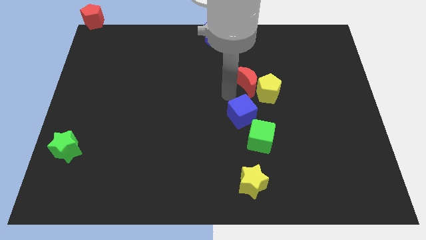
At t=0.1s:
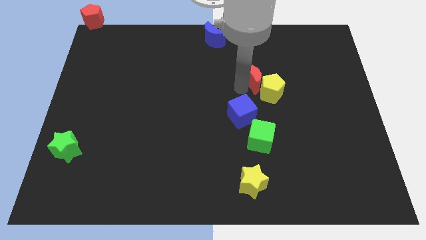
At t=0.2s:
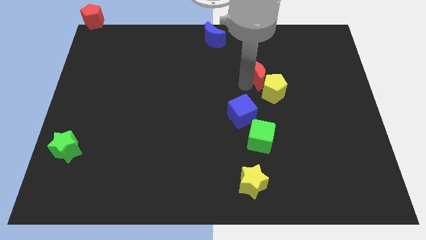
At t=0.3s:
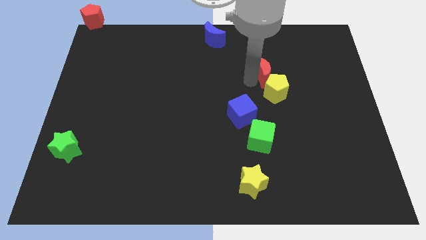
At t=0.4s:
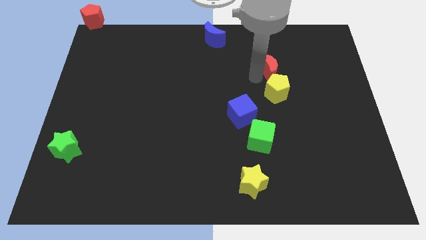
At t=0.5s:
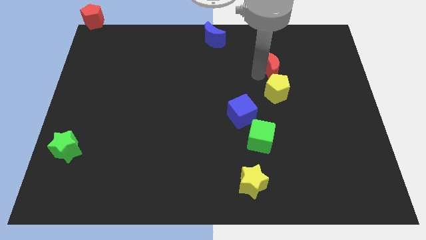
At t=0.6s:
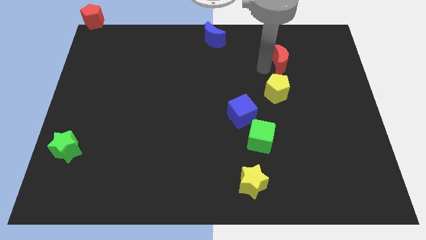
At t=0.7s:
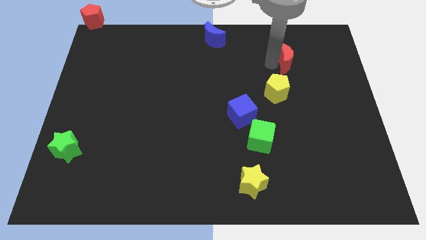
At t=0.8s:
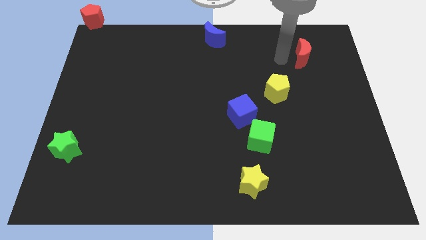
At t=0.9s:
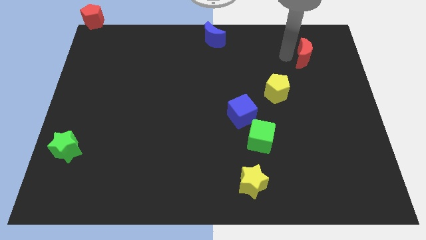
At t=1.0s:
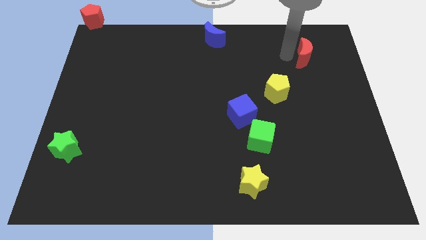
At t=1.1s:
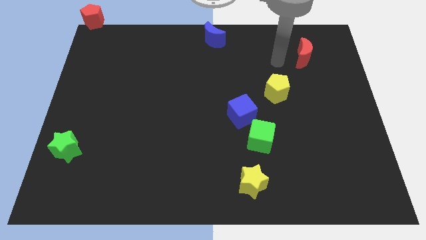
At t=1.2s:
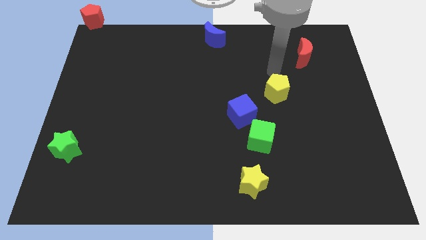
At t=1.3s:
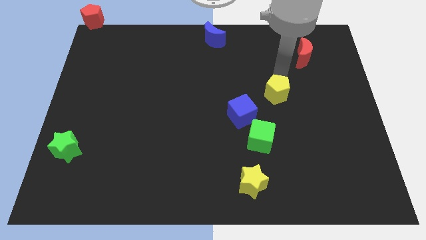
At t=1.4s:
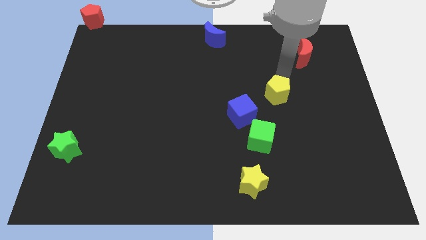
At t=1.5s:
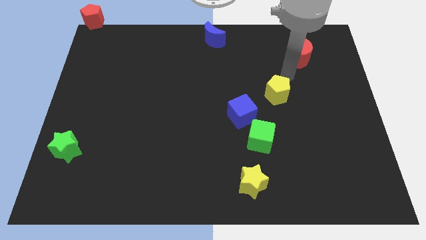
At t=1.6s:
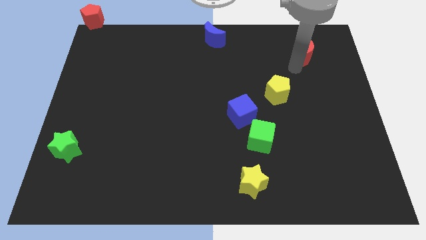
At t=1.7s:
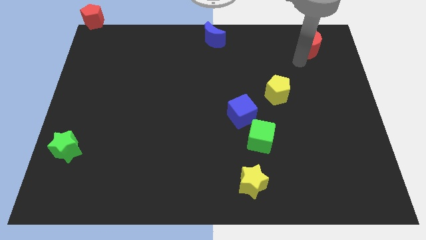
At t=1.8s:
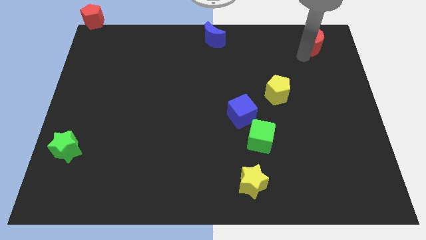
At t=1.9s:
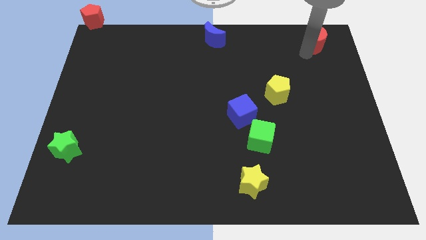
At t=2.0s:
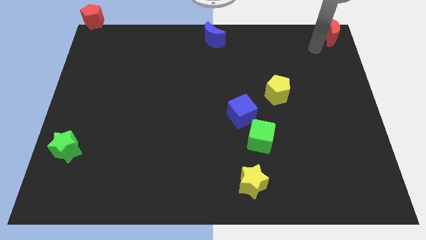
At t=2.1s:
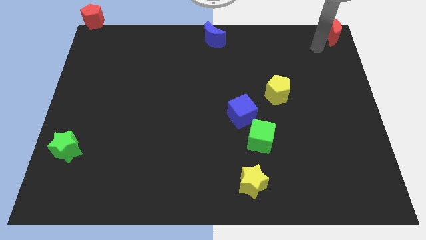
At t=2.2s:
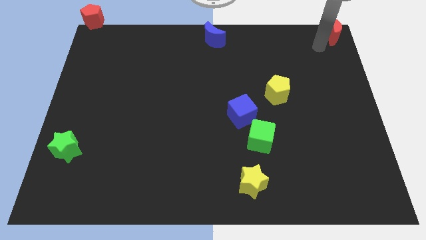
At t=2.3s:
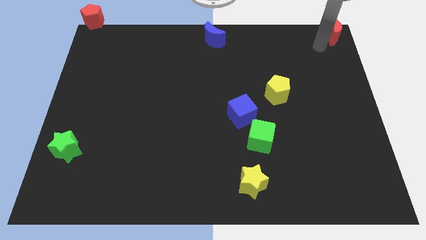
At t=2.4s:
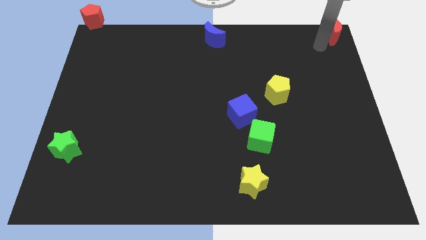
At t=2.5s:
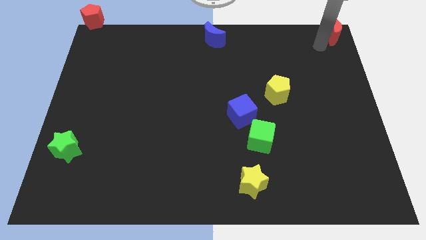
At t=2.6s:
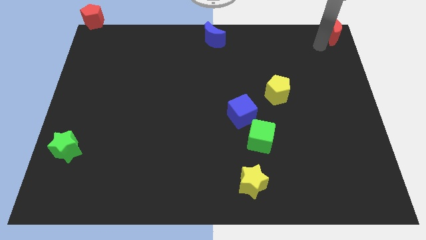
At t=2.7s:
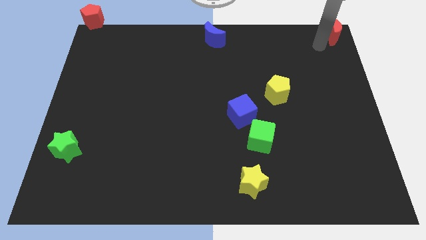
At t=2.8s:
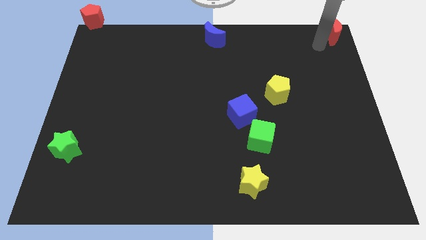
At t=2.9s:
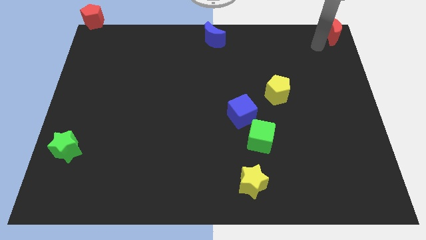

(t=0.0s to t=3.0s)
place red crescent towards top right corner

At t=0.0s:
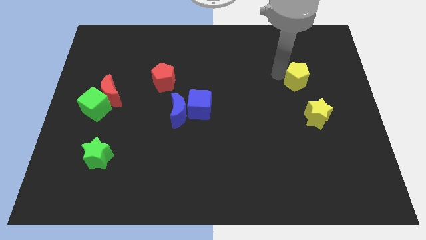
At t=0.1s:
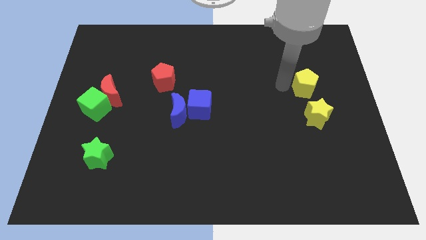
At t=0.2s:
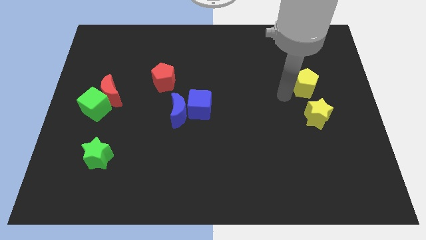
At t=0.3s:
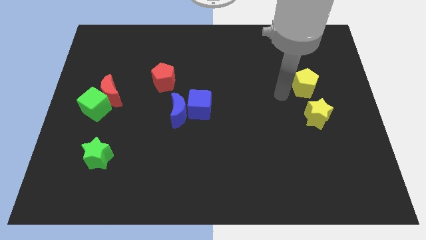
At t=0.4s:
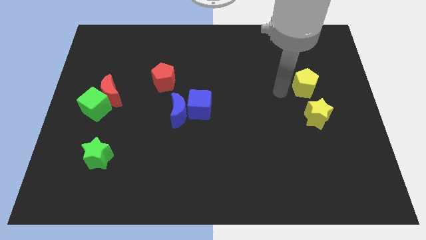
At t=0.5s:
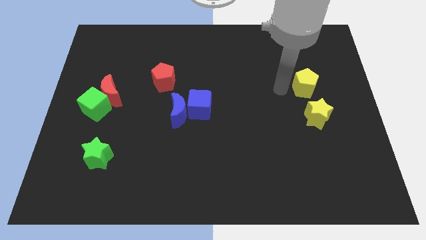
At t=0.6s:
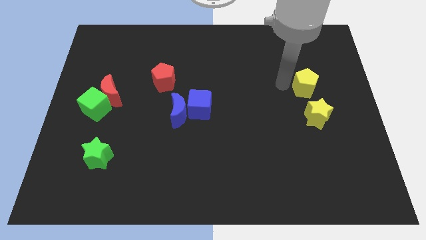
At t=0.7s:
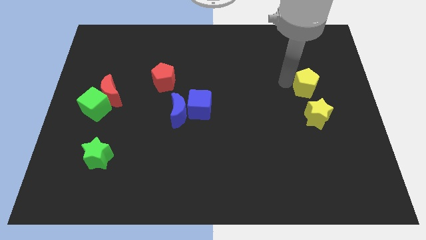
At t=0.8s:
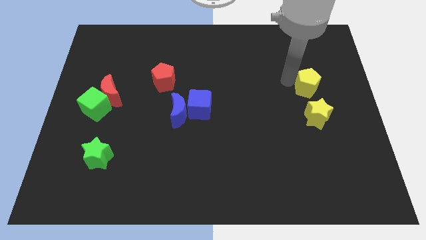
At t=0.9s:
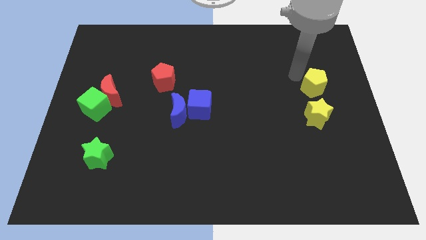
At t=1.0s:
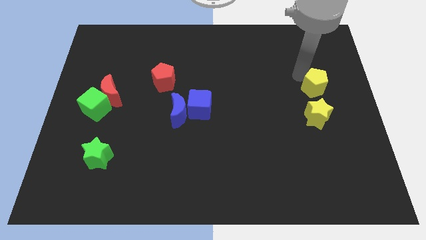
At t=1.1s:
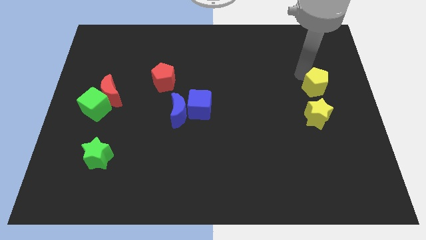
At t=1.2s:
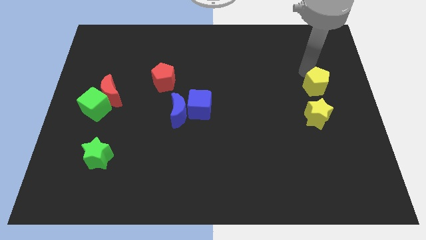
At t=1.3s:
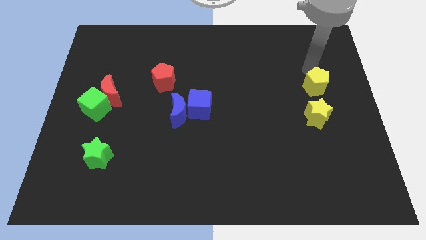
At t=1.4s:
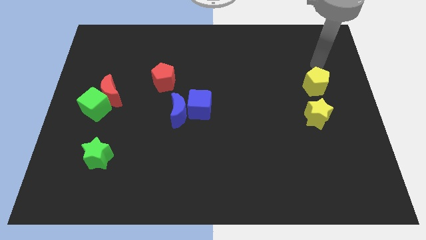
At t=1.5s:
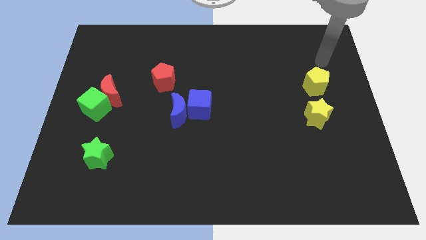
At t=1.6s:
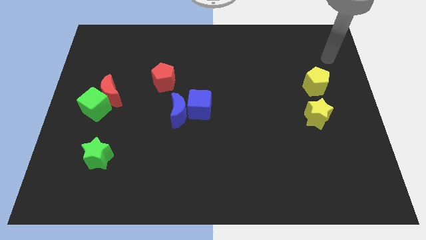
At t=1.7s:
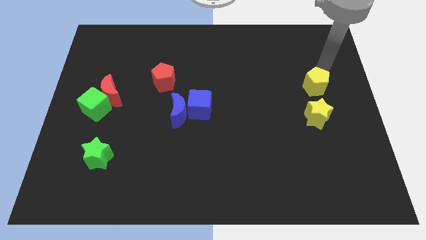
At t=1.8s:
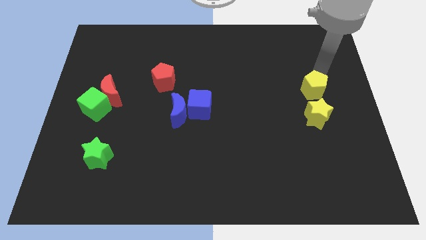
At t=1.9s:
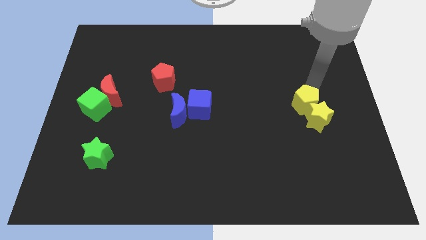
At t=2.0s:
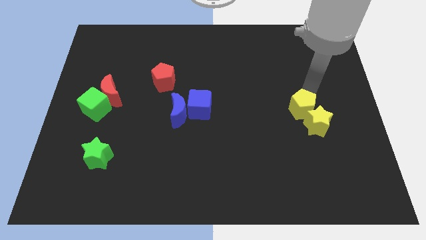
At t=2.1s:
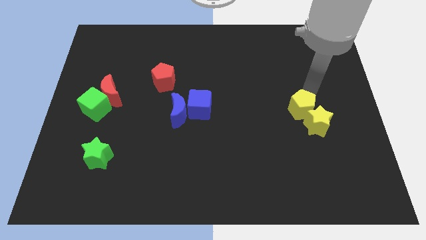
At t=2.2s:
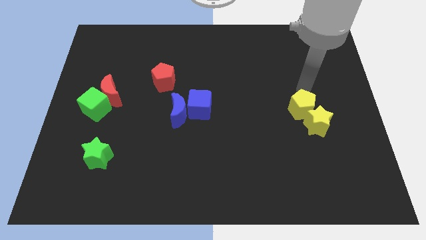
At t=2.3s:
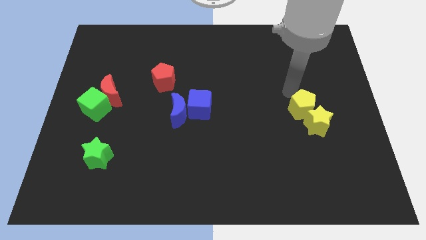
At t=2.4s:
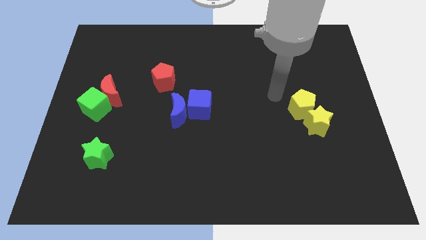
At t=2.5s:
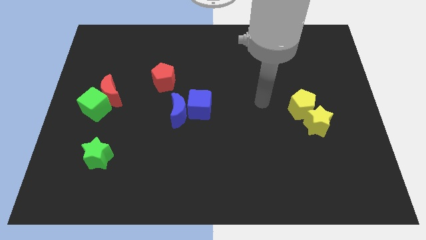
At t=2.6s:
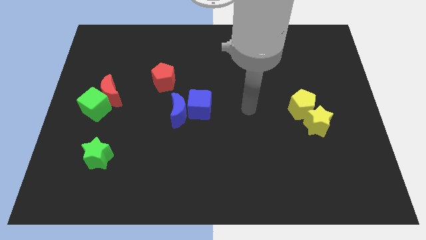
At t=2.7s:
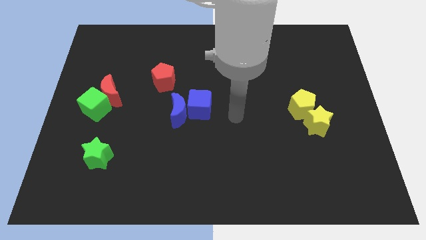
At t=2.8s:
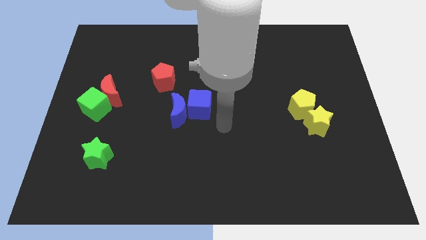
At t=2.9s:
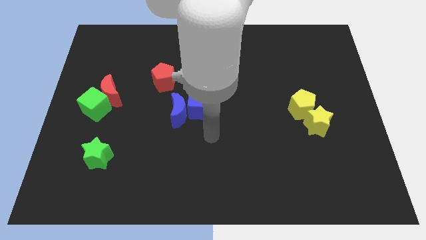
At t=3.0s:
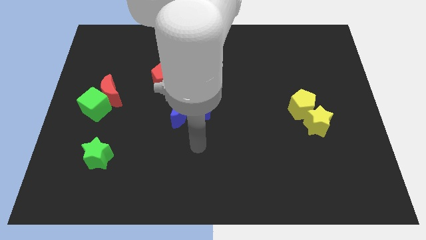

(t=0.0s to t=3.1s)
push the yellow pentagon to the top left side of the yellow star

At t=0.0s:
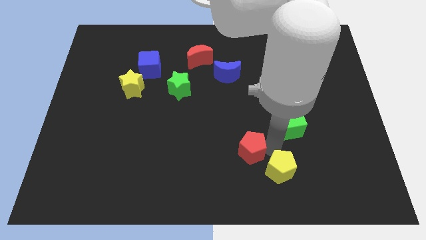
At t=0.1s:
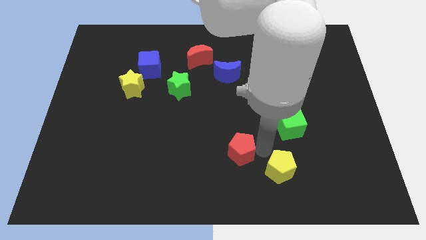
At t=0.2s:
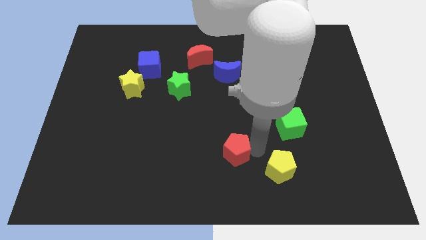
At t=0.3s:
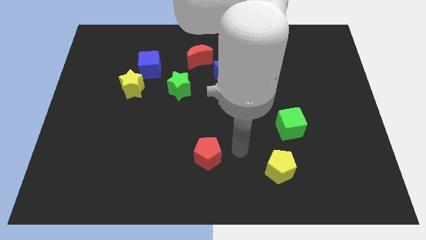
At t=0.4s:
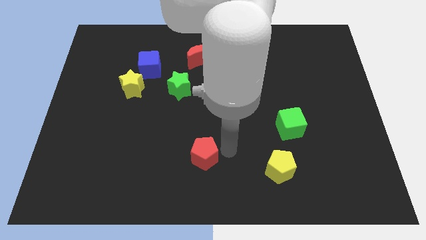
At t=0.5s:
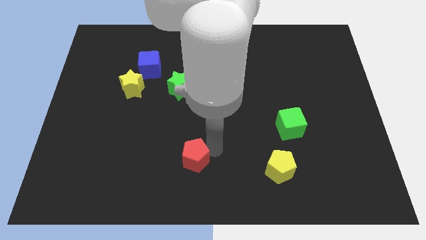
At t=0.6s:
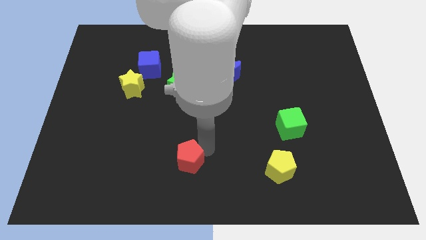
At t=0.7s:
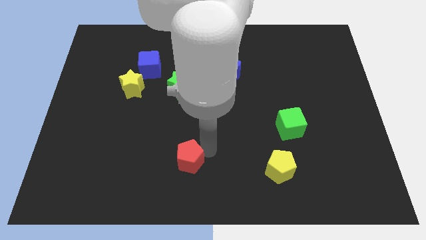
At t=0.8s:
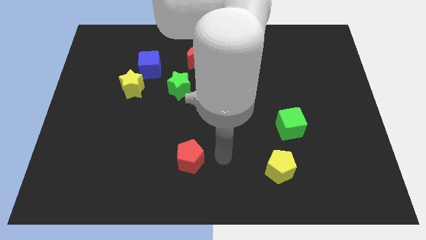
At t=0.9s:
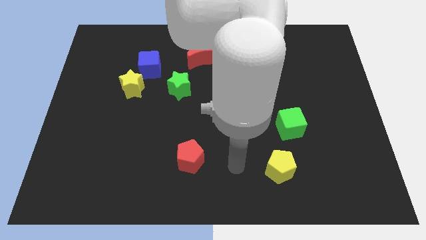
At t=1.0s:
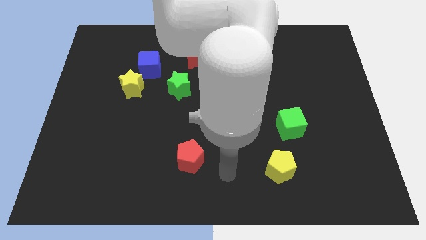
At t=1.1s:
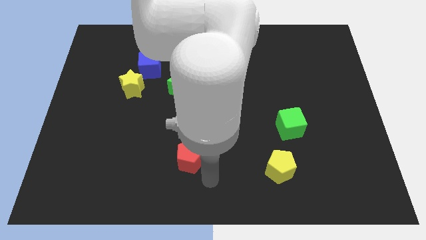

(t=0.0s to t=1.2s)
move the red pentagon left to the yellow pentagon

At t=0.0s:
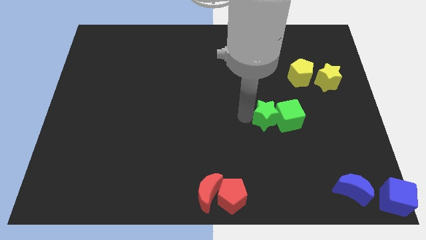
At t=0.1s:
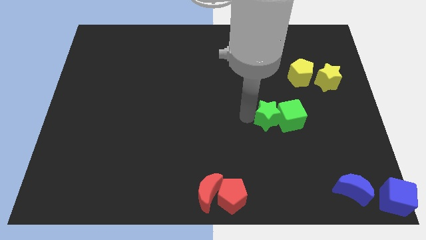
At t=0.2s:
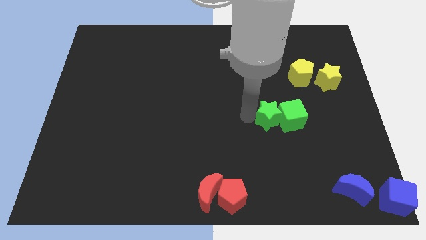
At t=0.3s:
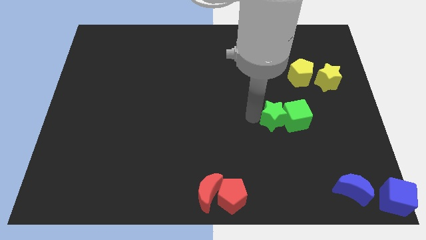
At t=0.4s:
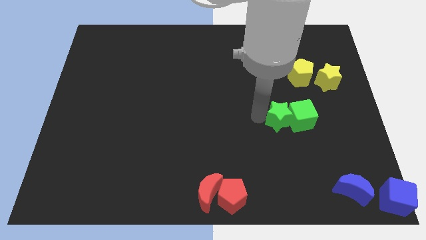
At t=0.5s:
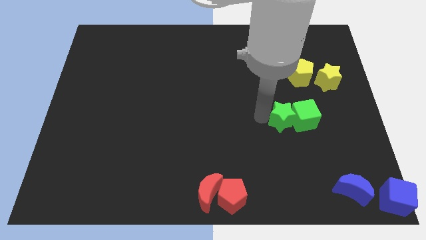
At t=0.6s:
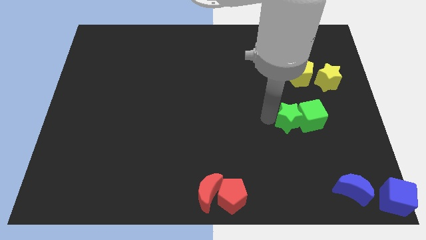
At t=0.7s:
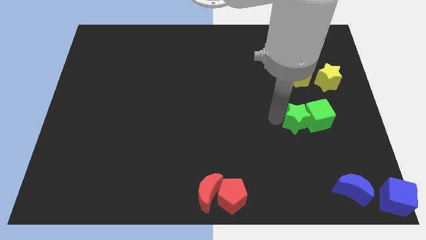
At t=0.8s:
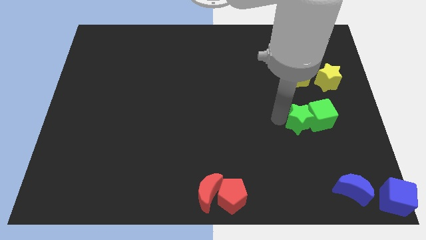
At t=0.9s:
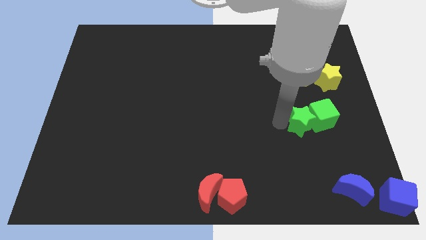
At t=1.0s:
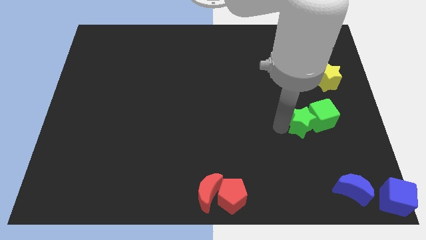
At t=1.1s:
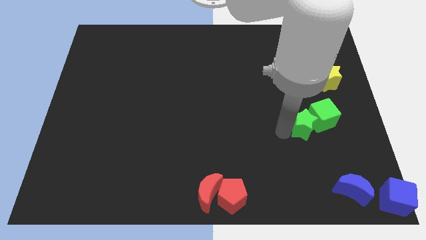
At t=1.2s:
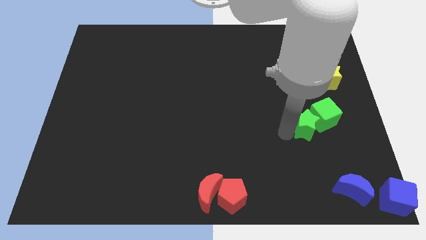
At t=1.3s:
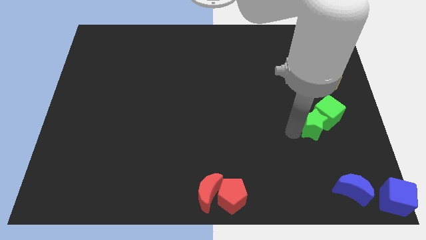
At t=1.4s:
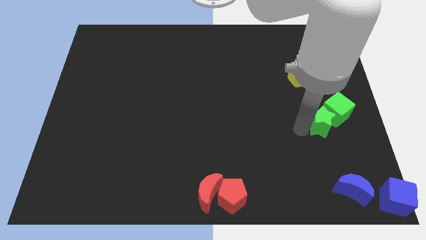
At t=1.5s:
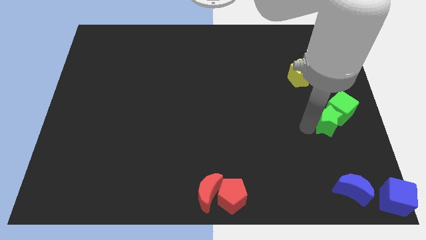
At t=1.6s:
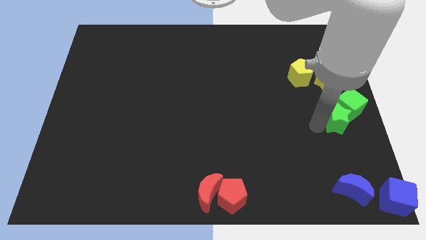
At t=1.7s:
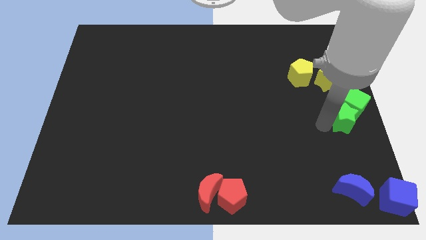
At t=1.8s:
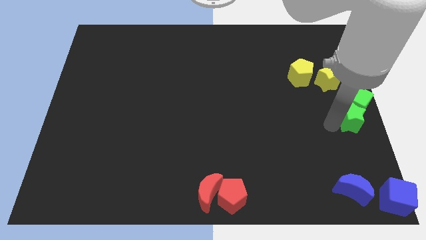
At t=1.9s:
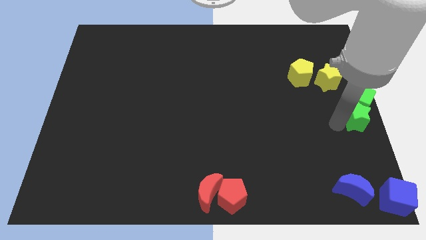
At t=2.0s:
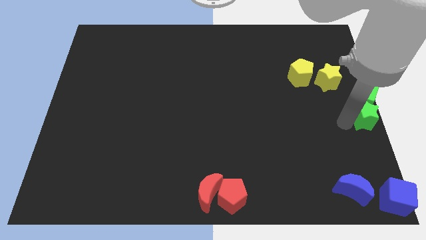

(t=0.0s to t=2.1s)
slide the green blocks to the center right
